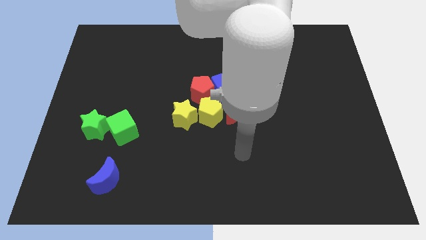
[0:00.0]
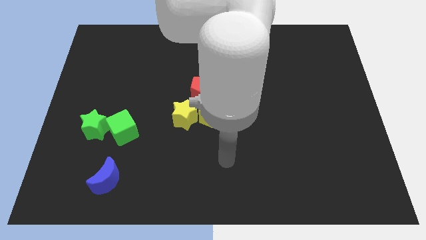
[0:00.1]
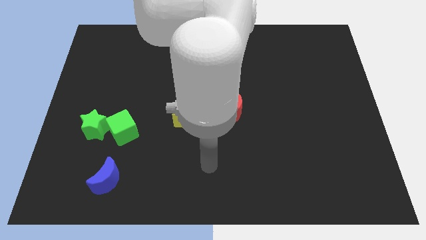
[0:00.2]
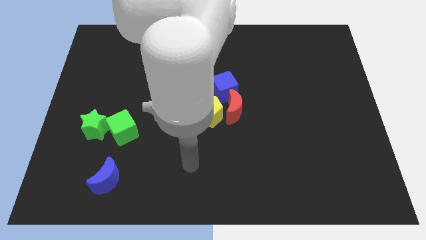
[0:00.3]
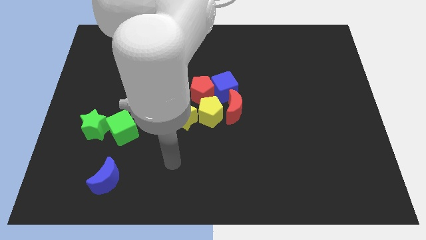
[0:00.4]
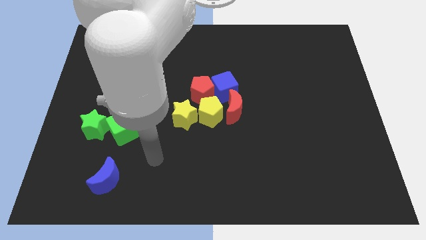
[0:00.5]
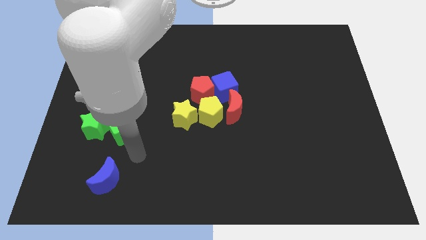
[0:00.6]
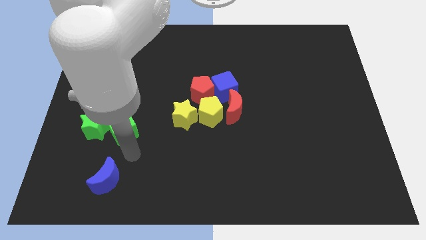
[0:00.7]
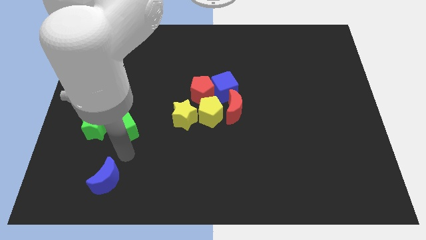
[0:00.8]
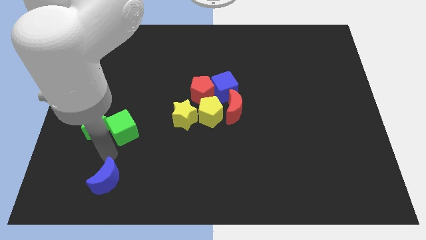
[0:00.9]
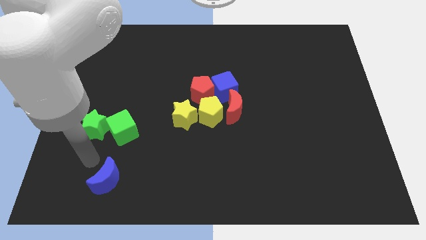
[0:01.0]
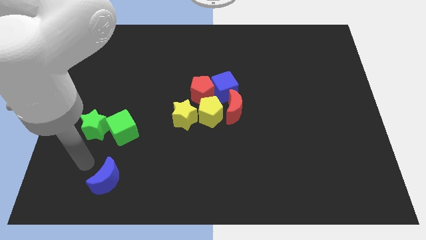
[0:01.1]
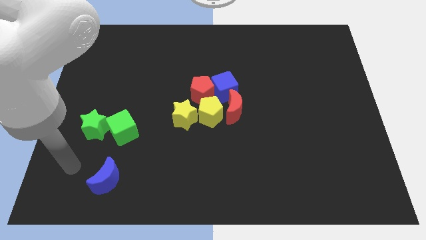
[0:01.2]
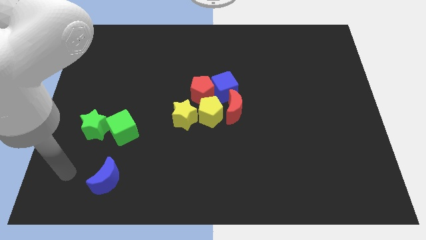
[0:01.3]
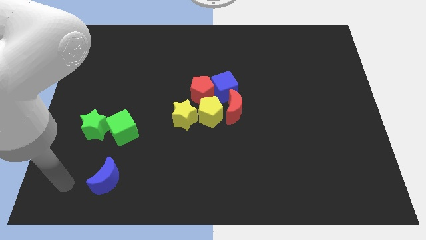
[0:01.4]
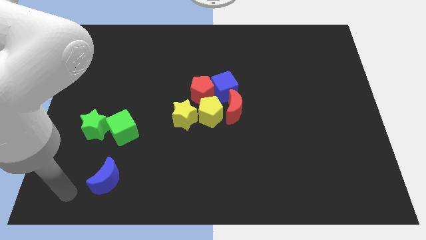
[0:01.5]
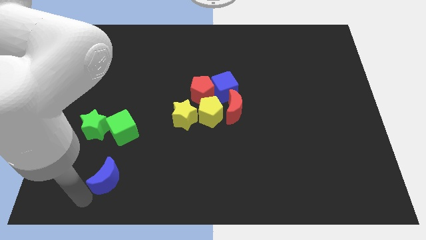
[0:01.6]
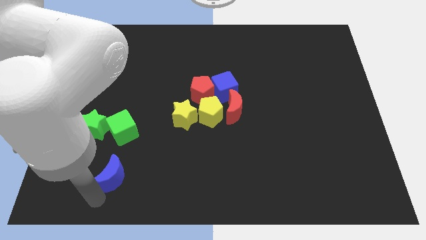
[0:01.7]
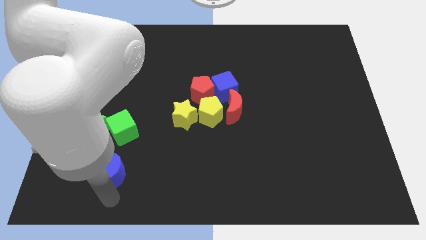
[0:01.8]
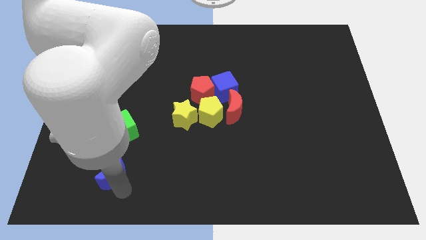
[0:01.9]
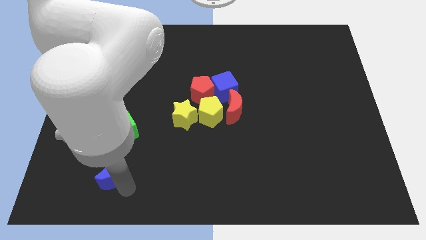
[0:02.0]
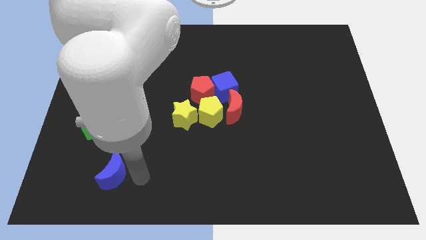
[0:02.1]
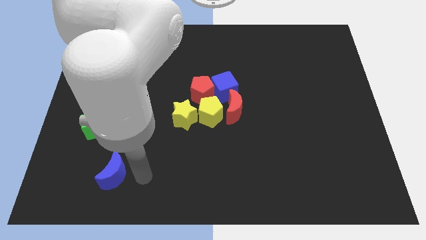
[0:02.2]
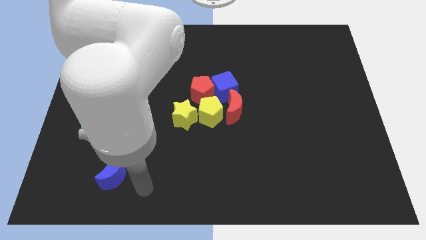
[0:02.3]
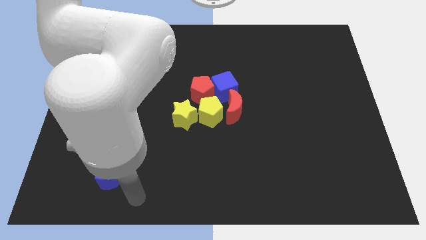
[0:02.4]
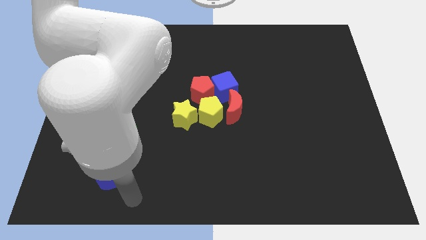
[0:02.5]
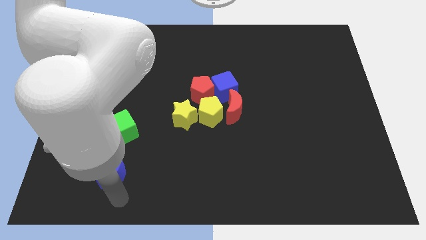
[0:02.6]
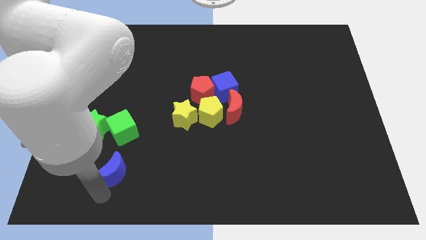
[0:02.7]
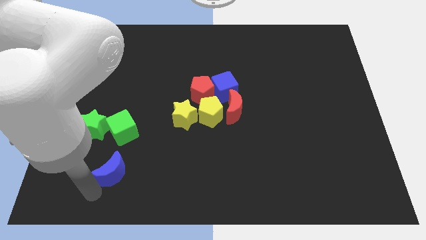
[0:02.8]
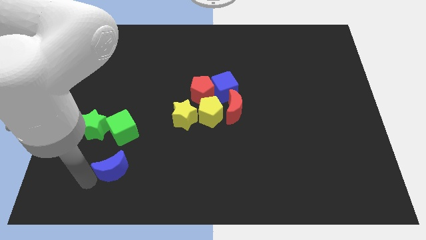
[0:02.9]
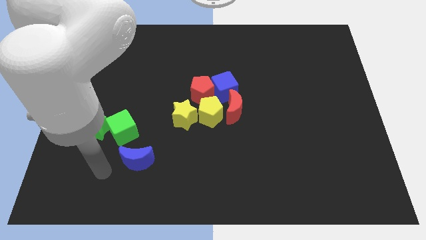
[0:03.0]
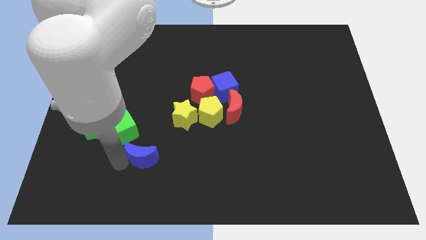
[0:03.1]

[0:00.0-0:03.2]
slightly move the blue moon towards the green cube

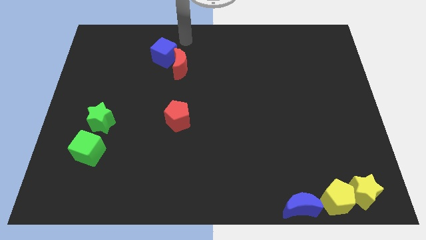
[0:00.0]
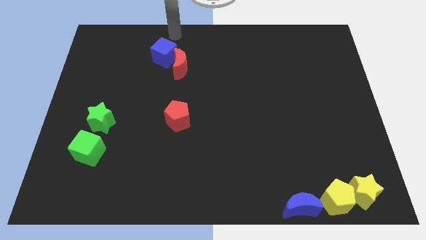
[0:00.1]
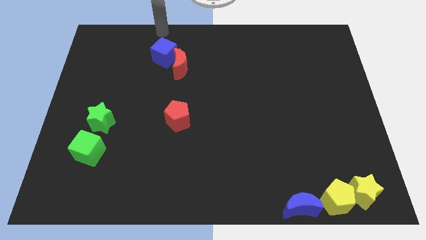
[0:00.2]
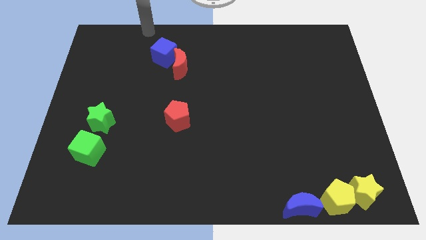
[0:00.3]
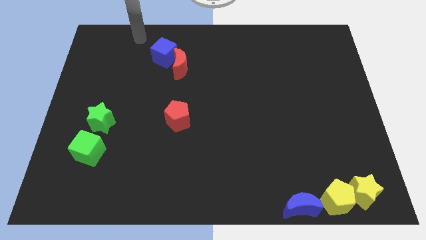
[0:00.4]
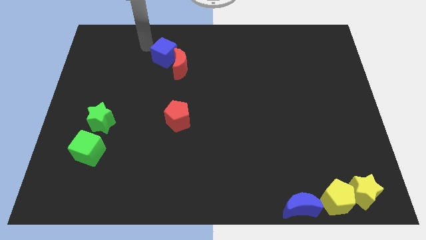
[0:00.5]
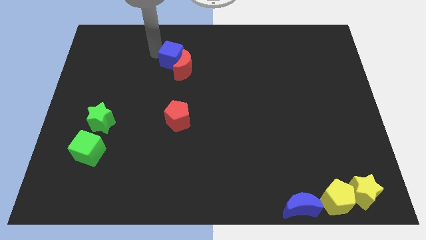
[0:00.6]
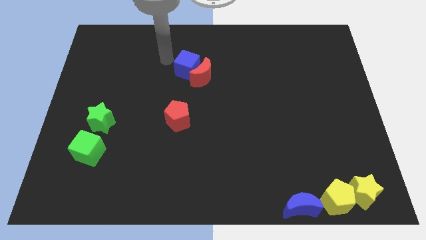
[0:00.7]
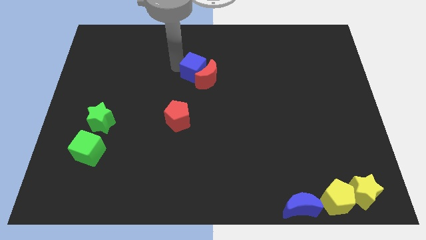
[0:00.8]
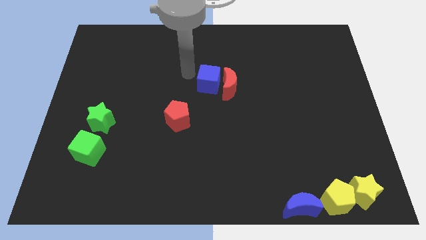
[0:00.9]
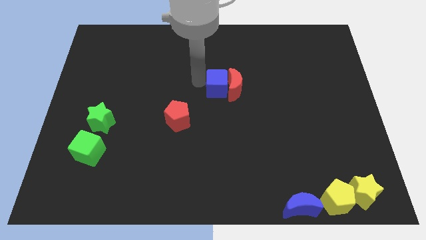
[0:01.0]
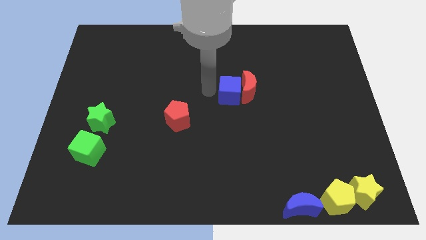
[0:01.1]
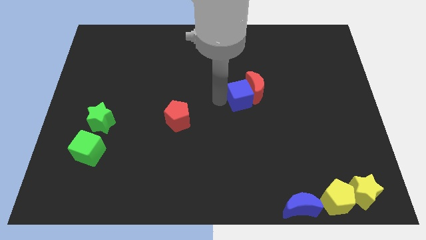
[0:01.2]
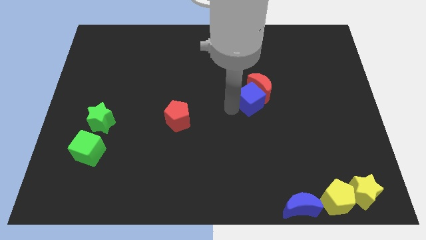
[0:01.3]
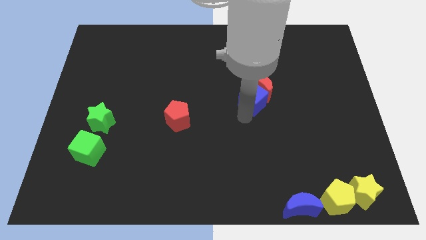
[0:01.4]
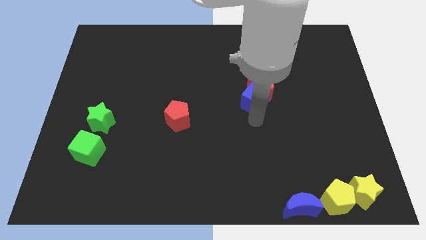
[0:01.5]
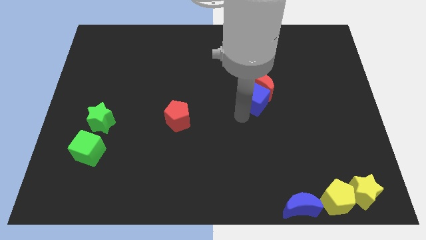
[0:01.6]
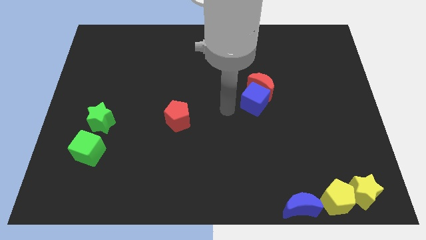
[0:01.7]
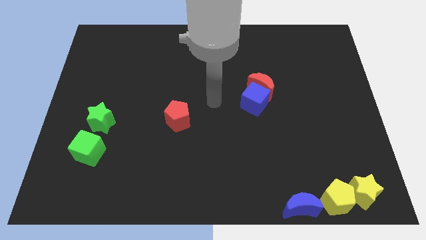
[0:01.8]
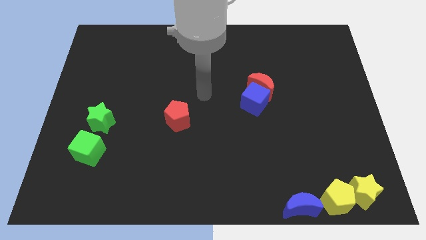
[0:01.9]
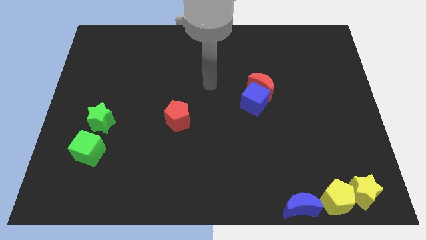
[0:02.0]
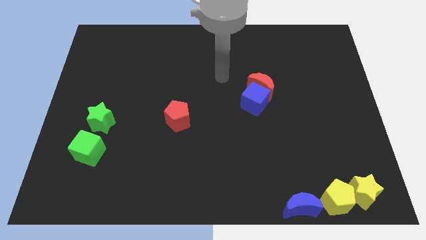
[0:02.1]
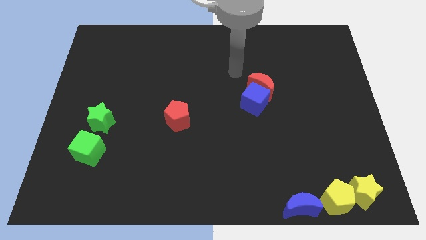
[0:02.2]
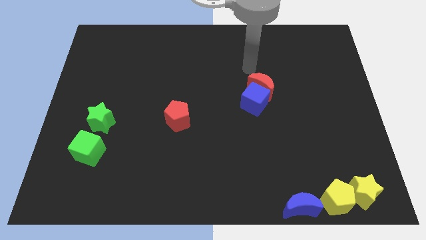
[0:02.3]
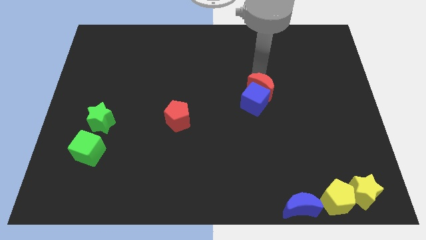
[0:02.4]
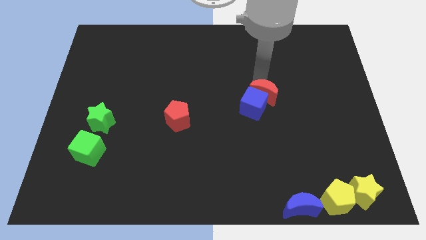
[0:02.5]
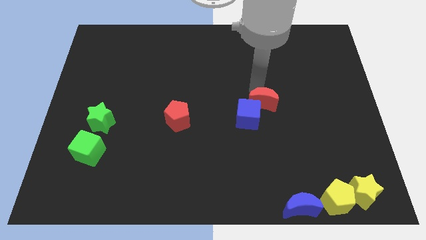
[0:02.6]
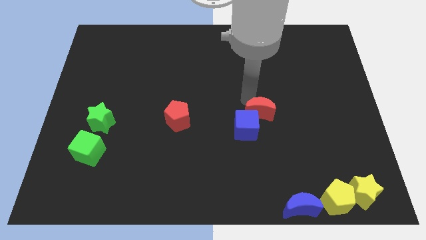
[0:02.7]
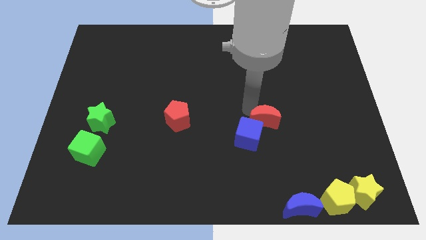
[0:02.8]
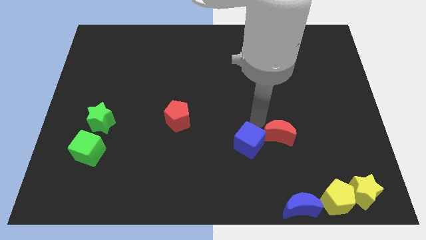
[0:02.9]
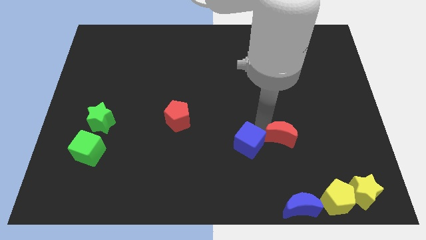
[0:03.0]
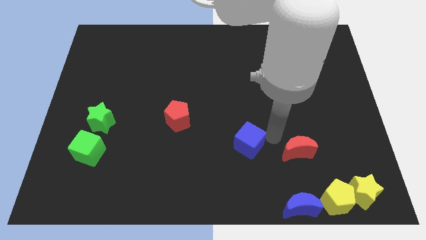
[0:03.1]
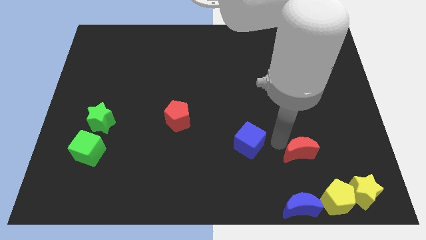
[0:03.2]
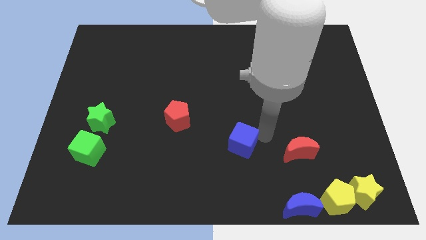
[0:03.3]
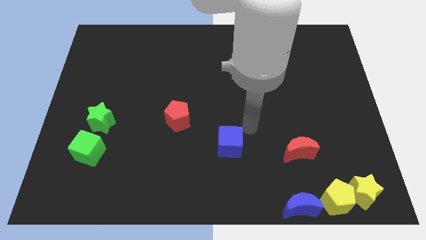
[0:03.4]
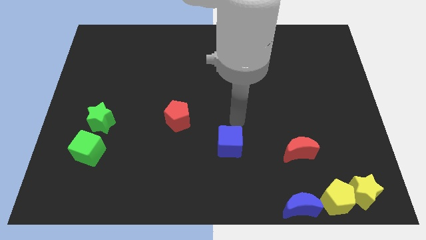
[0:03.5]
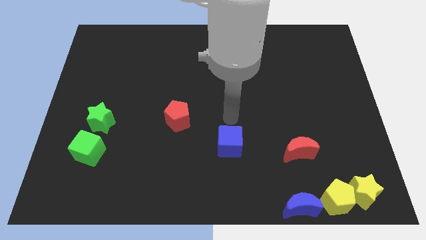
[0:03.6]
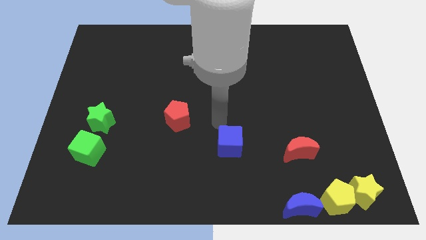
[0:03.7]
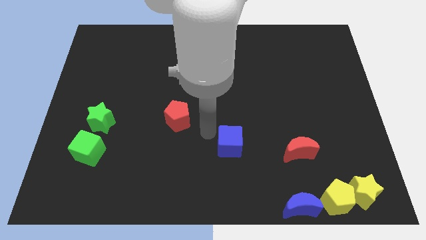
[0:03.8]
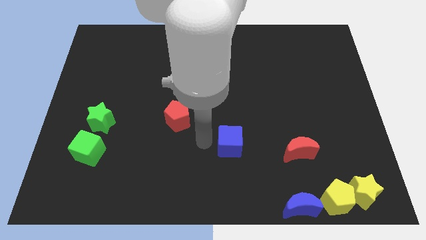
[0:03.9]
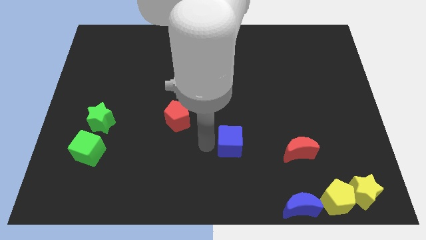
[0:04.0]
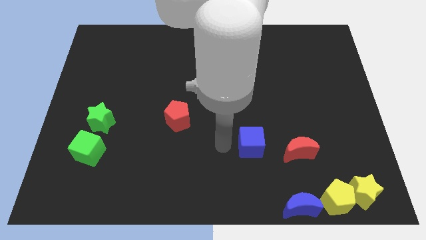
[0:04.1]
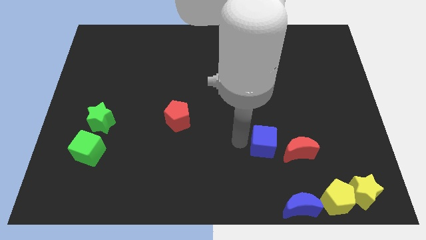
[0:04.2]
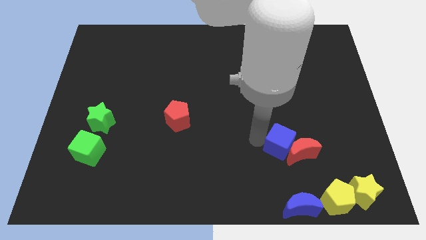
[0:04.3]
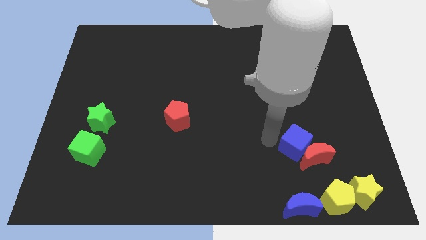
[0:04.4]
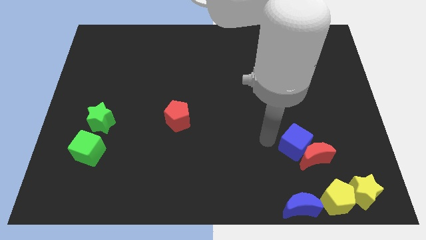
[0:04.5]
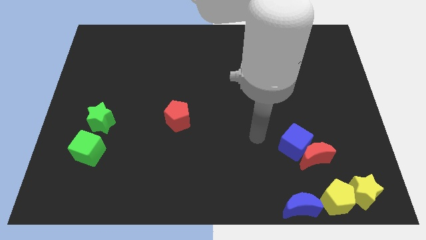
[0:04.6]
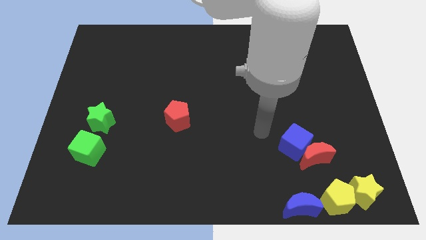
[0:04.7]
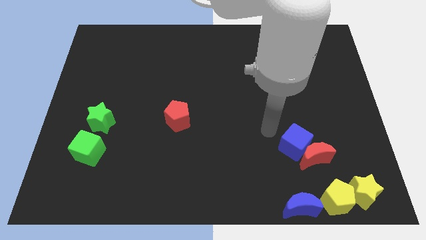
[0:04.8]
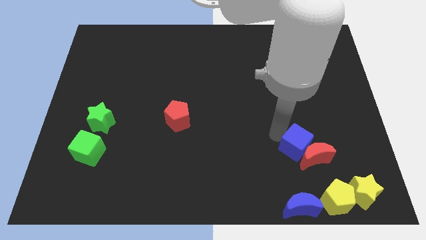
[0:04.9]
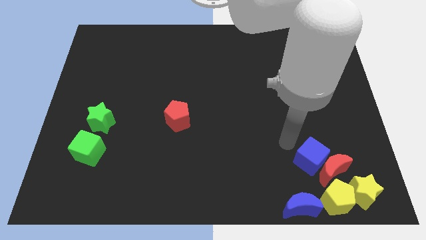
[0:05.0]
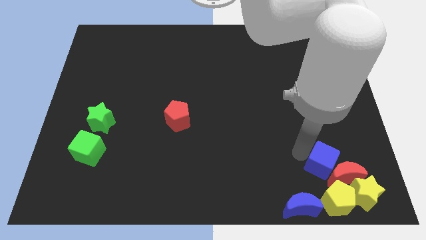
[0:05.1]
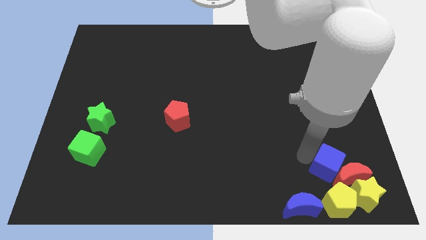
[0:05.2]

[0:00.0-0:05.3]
push the blue cube and the red moon into the yellow blocks

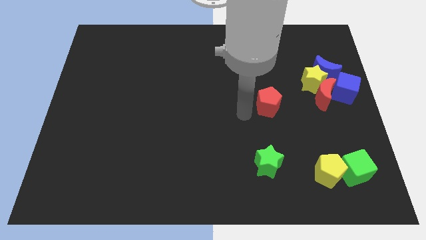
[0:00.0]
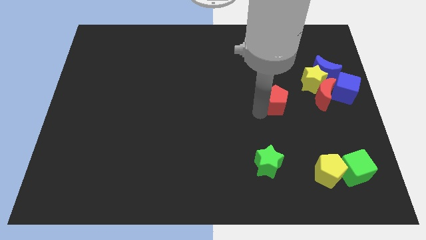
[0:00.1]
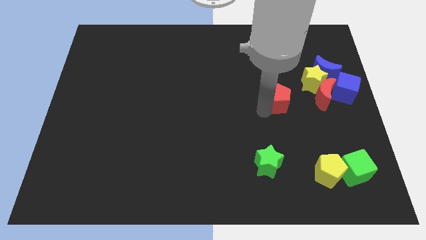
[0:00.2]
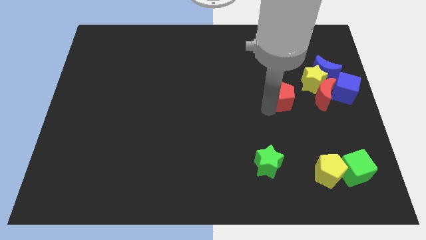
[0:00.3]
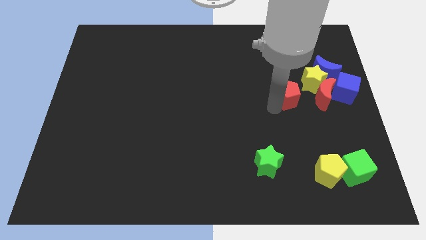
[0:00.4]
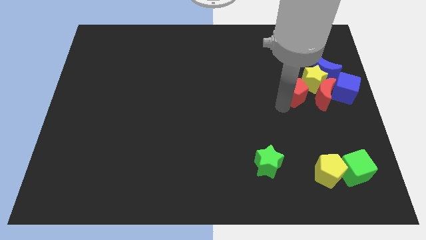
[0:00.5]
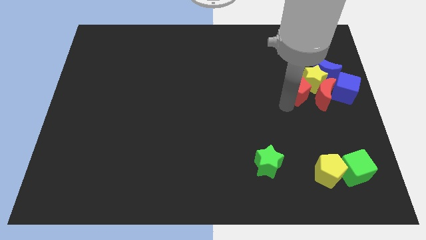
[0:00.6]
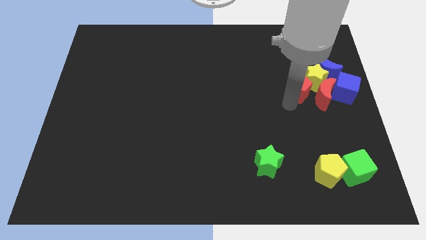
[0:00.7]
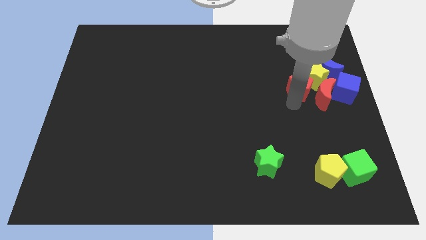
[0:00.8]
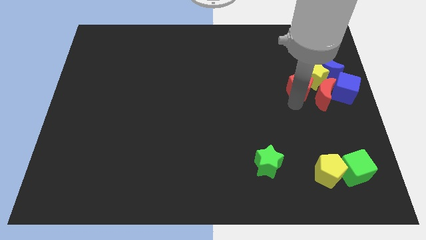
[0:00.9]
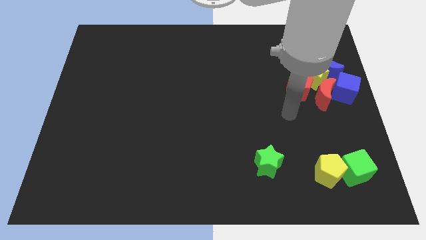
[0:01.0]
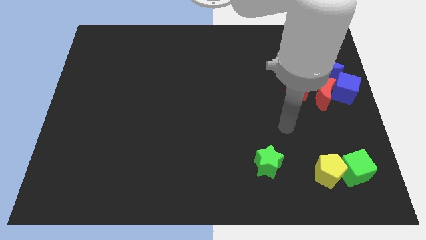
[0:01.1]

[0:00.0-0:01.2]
push red pentagon into yellow star
